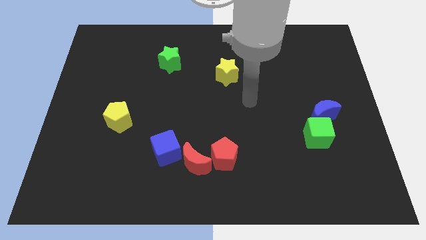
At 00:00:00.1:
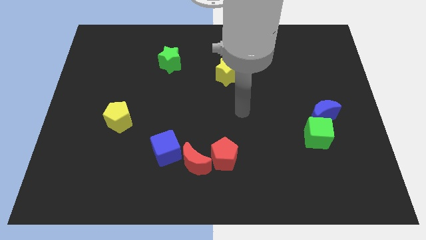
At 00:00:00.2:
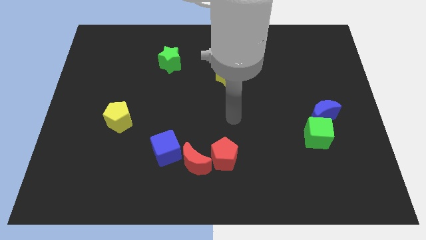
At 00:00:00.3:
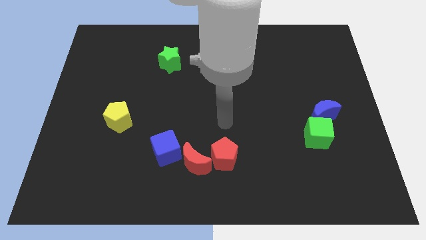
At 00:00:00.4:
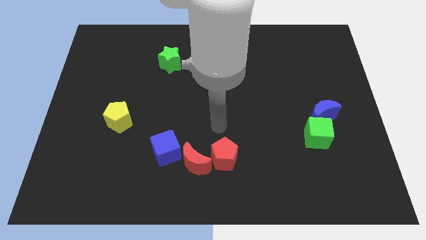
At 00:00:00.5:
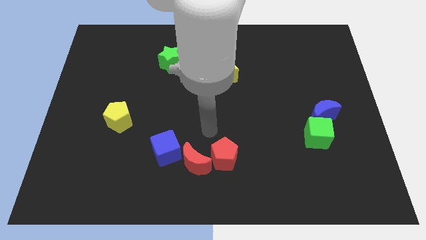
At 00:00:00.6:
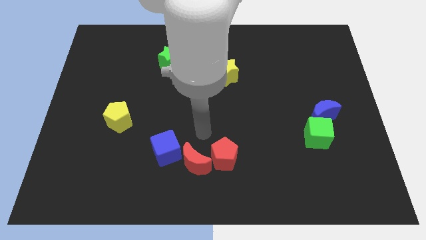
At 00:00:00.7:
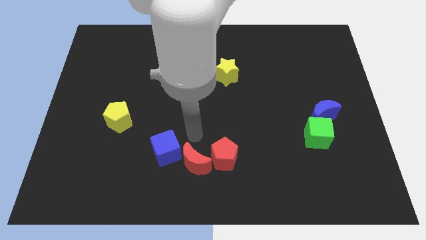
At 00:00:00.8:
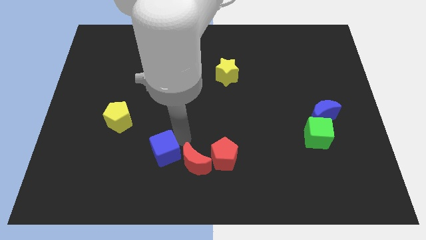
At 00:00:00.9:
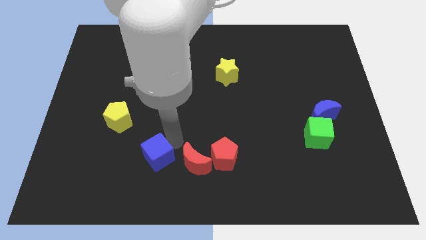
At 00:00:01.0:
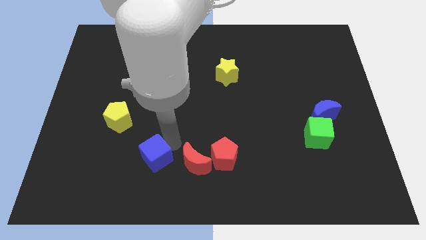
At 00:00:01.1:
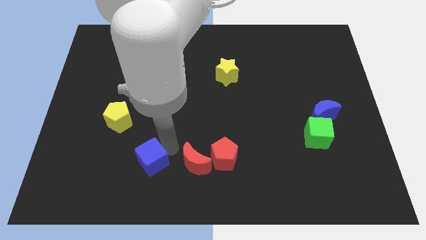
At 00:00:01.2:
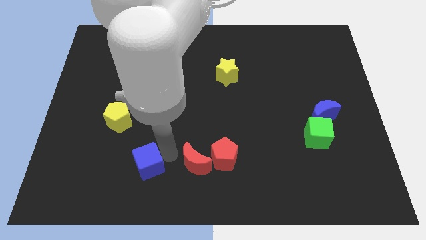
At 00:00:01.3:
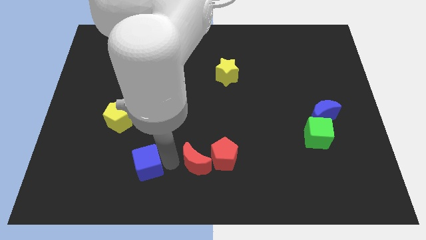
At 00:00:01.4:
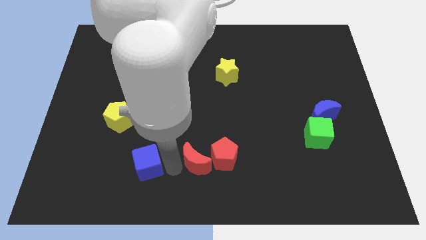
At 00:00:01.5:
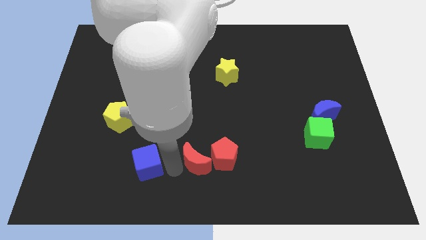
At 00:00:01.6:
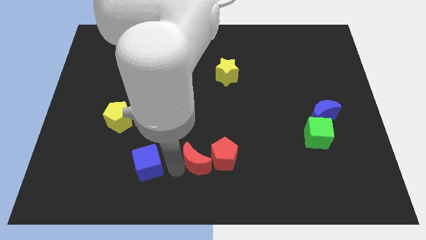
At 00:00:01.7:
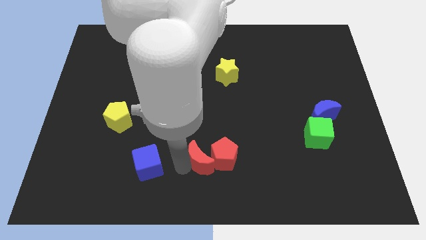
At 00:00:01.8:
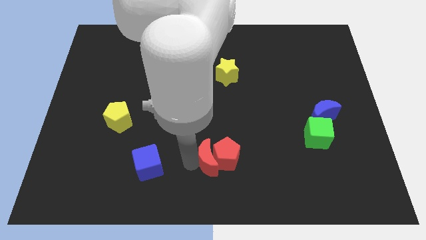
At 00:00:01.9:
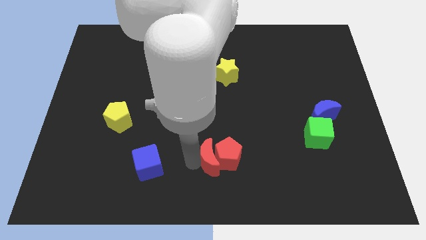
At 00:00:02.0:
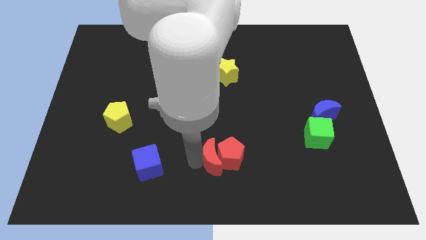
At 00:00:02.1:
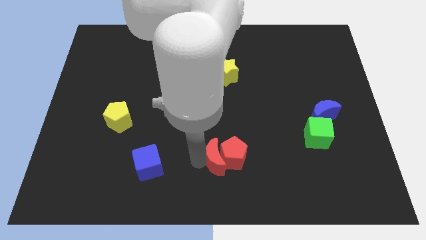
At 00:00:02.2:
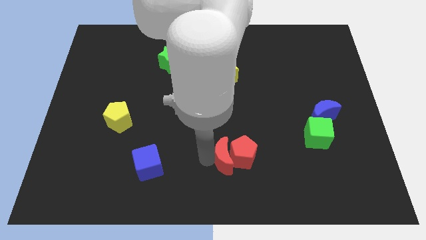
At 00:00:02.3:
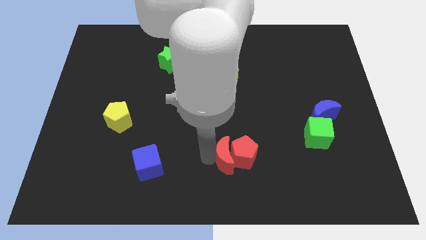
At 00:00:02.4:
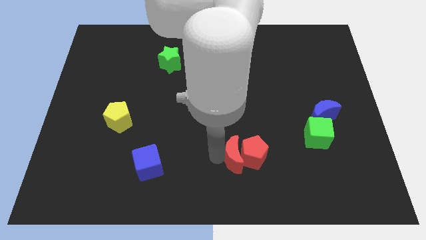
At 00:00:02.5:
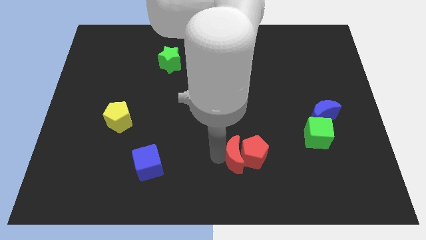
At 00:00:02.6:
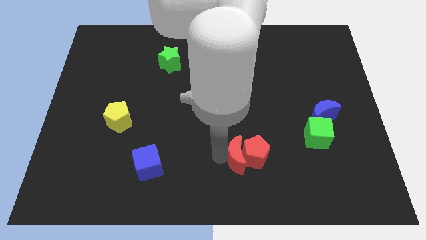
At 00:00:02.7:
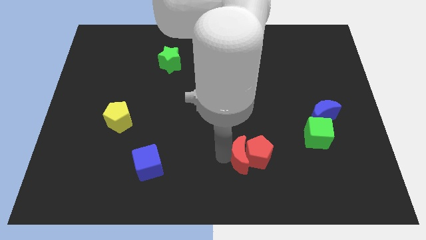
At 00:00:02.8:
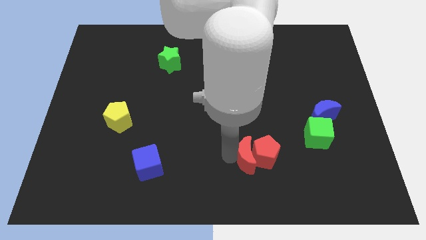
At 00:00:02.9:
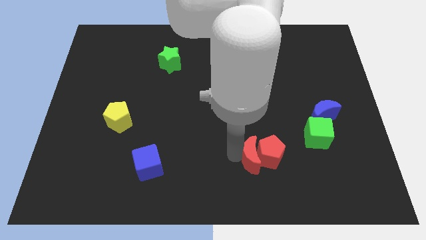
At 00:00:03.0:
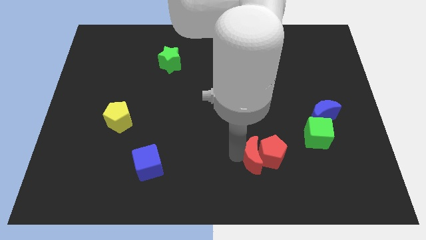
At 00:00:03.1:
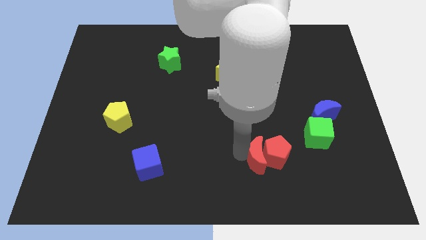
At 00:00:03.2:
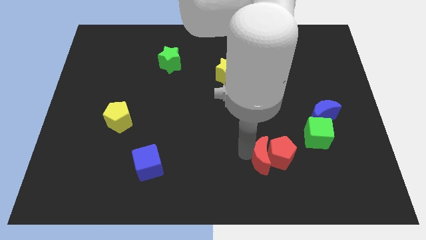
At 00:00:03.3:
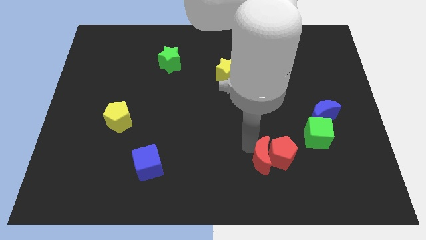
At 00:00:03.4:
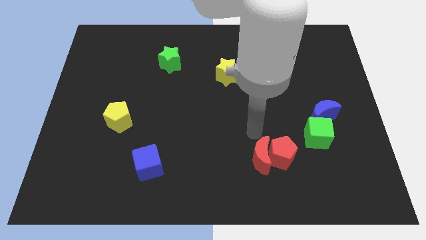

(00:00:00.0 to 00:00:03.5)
move the red pentagon with the red crescent

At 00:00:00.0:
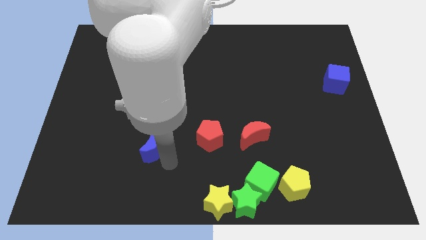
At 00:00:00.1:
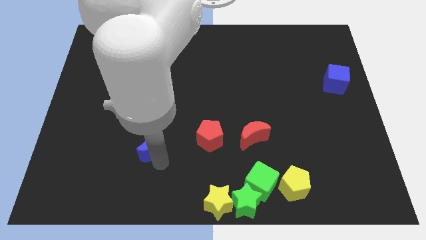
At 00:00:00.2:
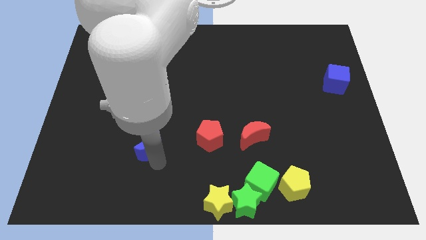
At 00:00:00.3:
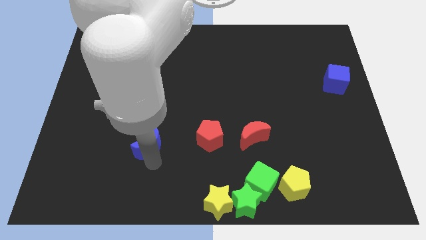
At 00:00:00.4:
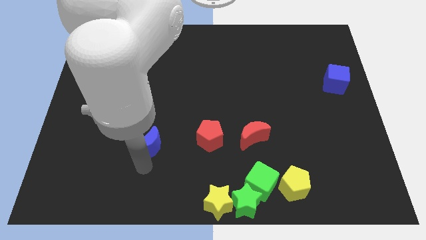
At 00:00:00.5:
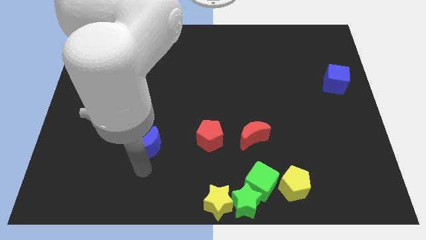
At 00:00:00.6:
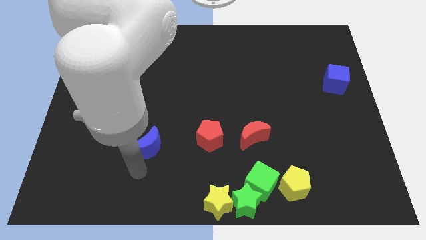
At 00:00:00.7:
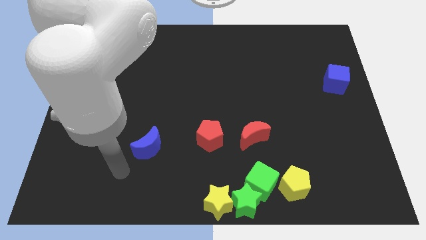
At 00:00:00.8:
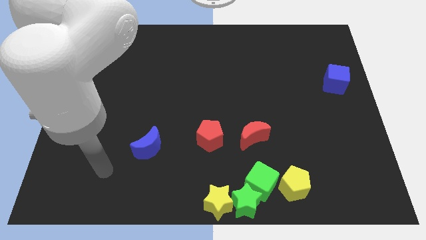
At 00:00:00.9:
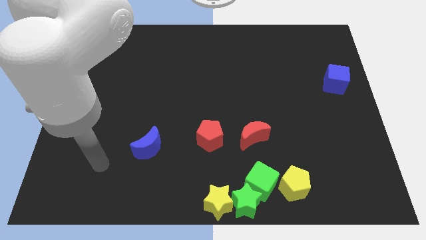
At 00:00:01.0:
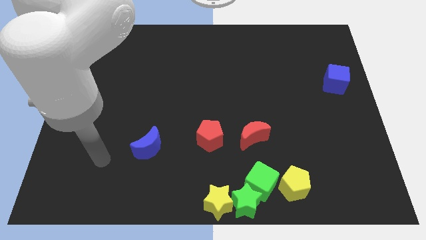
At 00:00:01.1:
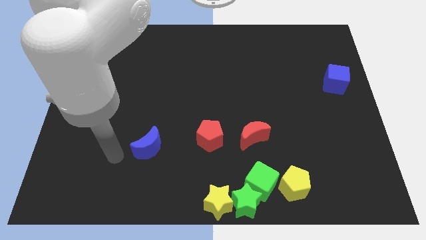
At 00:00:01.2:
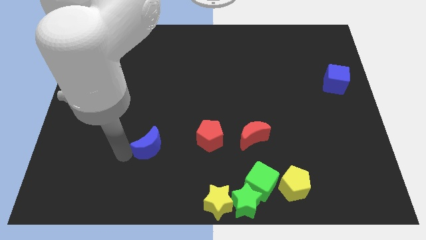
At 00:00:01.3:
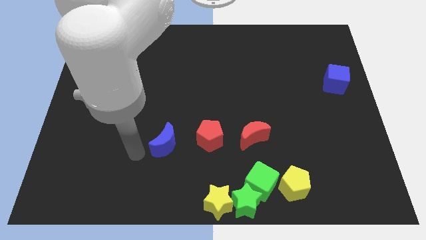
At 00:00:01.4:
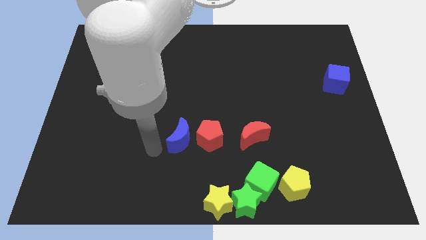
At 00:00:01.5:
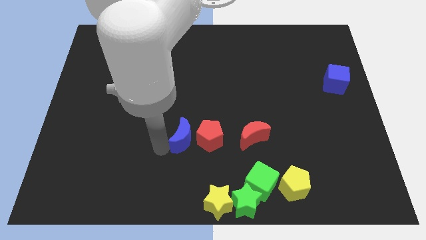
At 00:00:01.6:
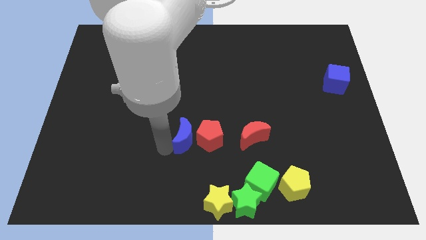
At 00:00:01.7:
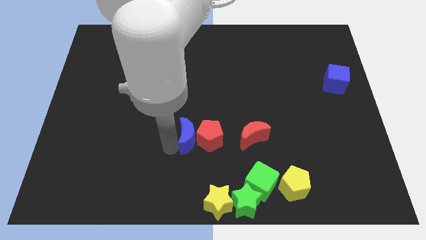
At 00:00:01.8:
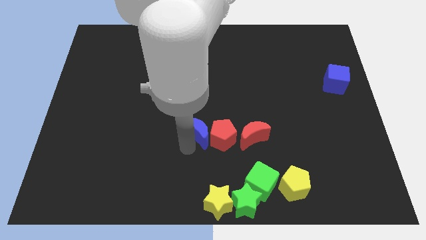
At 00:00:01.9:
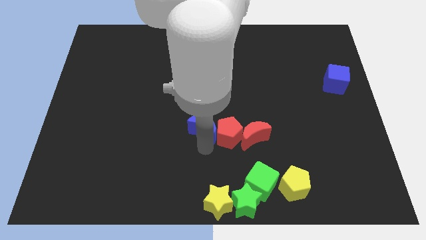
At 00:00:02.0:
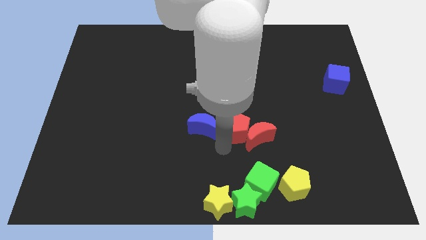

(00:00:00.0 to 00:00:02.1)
move the blue moon into the red pentagon

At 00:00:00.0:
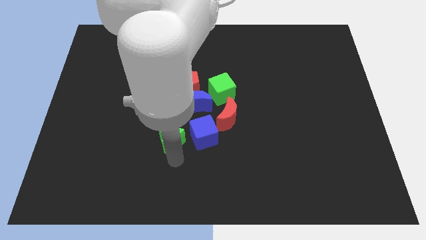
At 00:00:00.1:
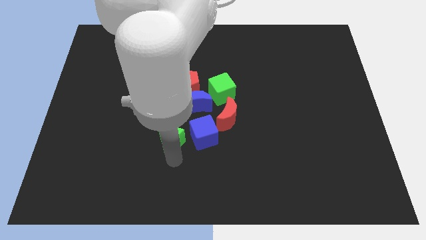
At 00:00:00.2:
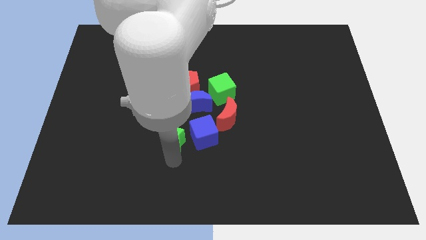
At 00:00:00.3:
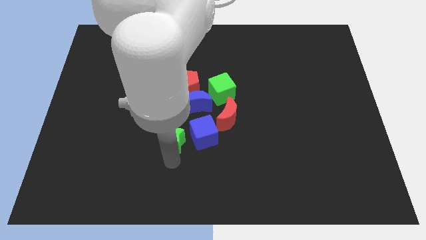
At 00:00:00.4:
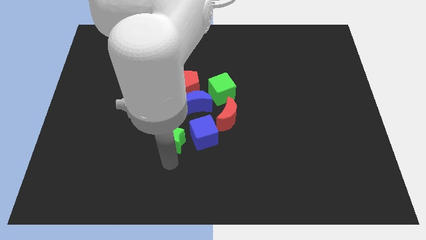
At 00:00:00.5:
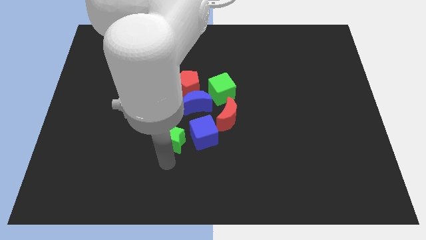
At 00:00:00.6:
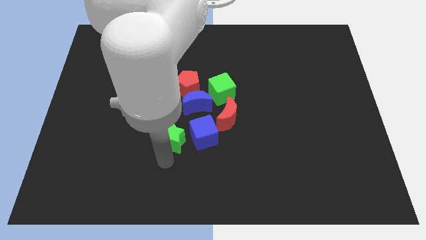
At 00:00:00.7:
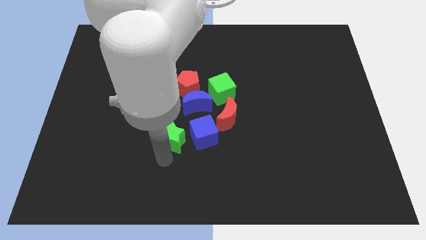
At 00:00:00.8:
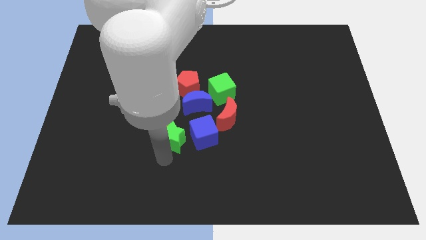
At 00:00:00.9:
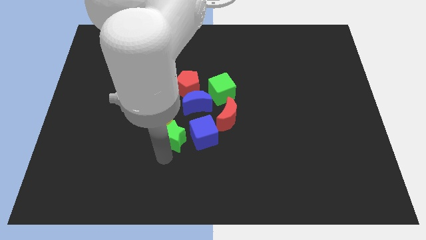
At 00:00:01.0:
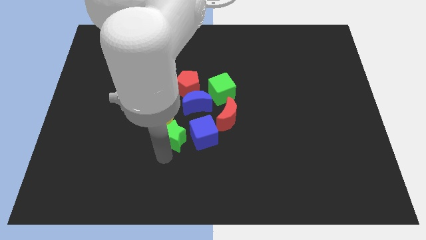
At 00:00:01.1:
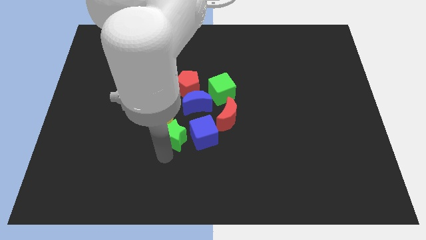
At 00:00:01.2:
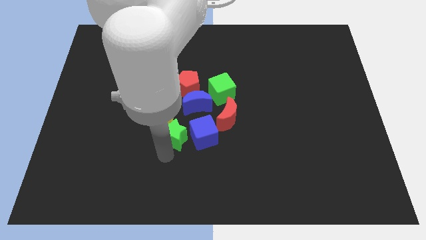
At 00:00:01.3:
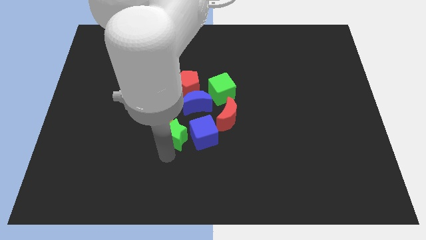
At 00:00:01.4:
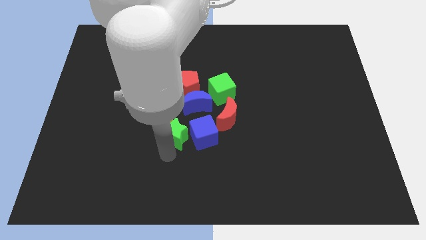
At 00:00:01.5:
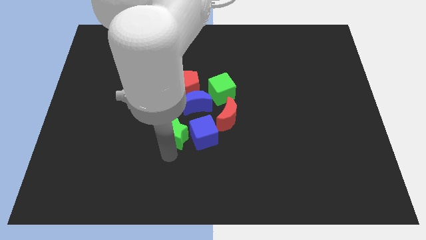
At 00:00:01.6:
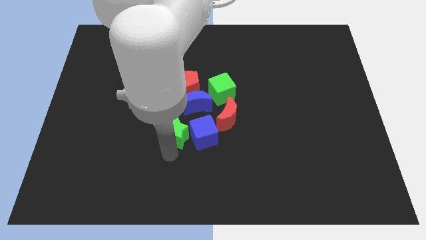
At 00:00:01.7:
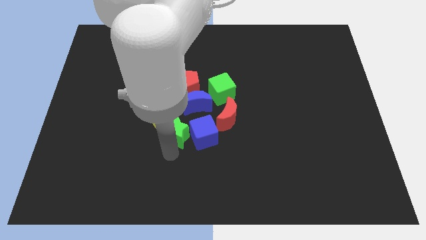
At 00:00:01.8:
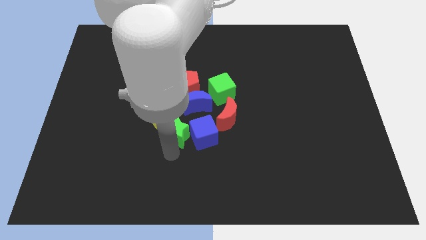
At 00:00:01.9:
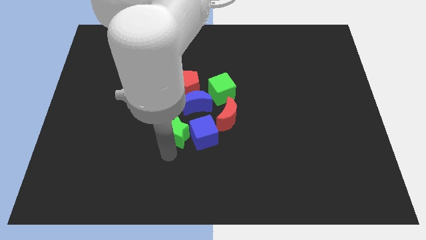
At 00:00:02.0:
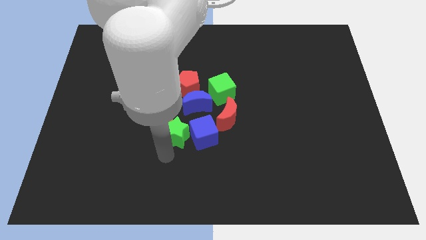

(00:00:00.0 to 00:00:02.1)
place the green star left to the blue cube

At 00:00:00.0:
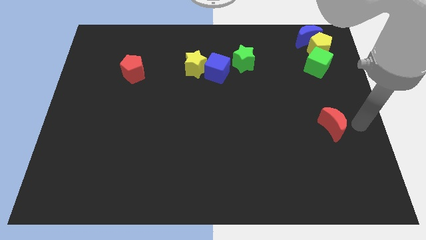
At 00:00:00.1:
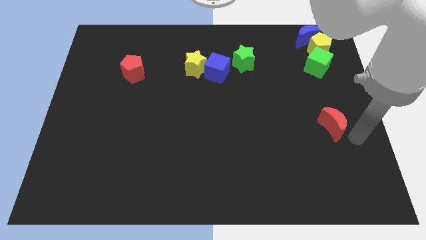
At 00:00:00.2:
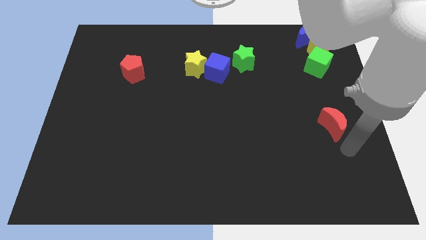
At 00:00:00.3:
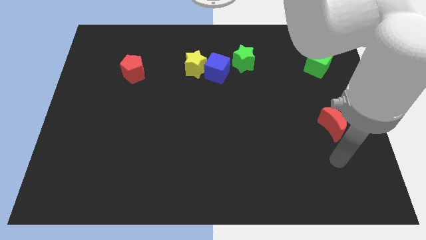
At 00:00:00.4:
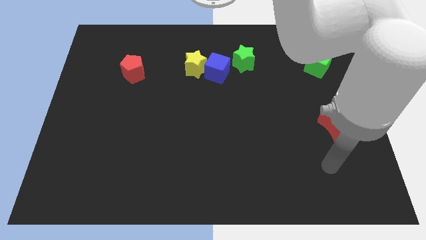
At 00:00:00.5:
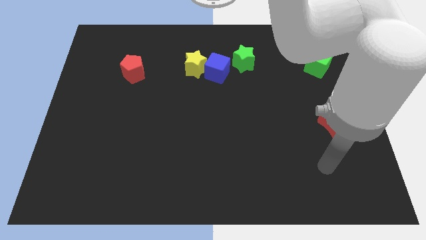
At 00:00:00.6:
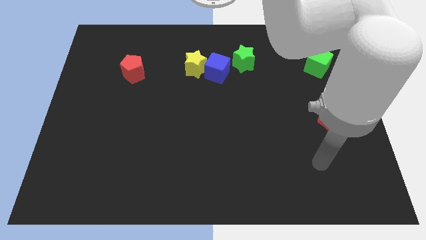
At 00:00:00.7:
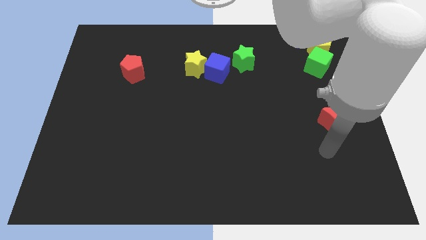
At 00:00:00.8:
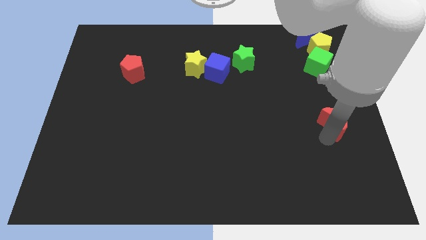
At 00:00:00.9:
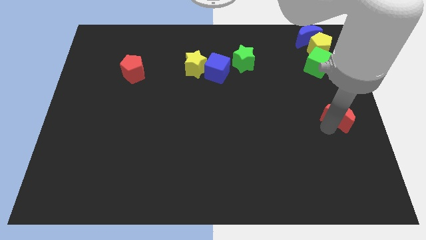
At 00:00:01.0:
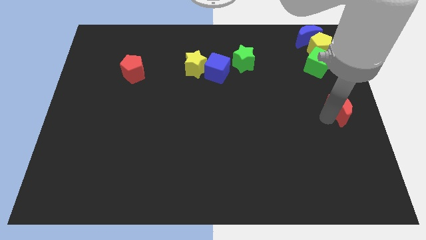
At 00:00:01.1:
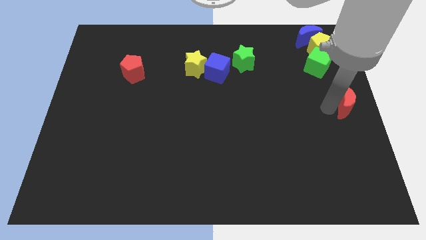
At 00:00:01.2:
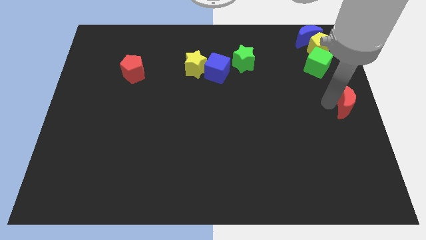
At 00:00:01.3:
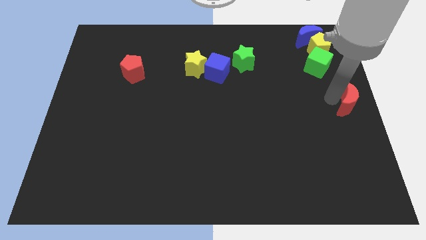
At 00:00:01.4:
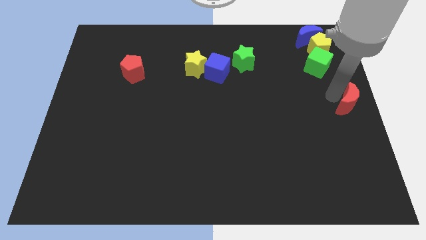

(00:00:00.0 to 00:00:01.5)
move red crescent diagonally on the bottom right side of the green cube
